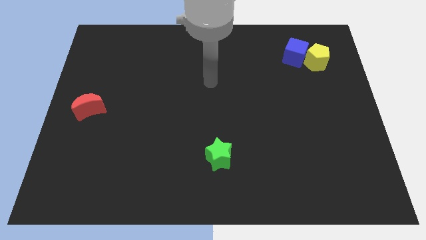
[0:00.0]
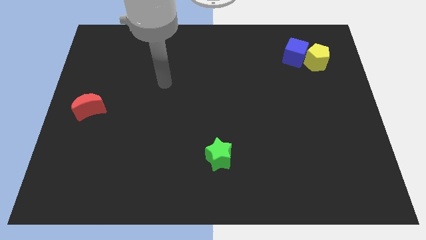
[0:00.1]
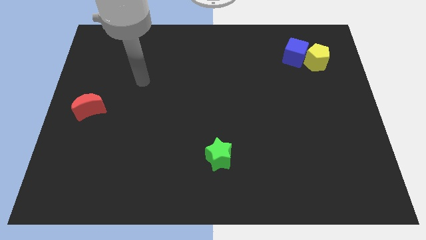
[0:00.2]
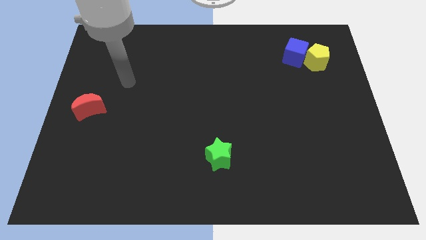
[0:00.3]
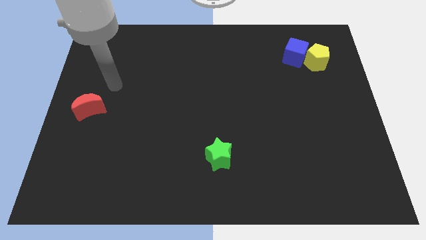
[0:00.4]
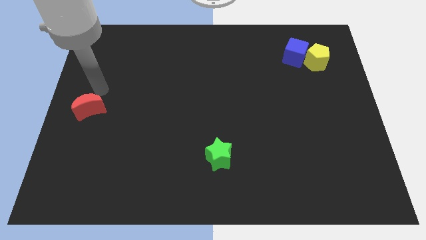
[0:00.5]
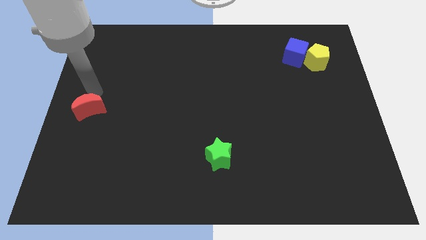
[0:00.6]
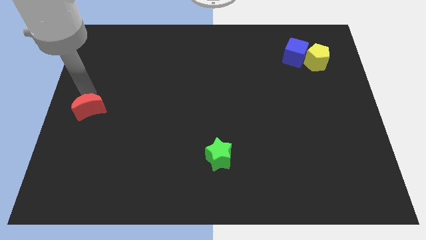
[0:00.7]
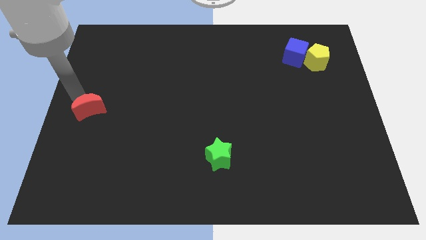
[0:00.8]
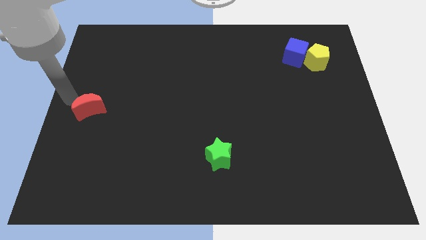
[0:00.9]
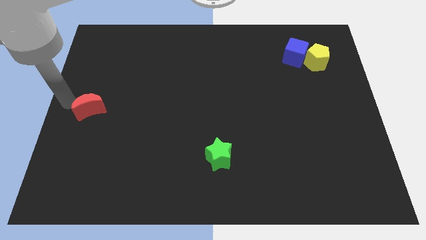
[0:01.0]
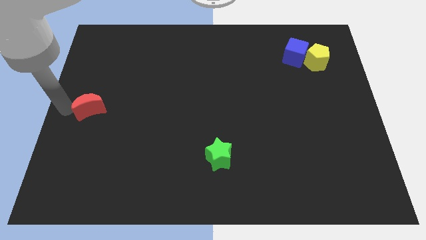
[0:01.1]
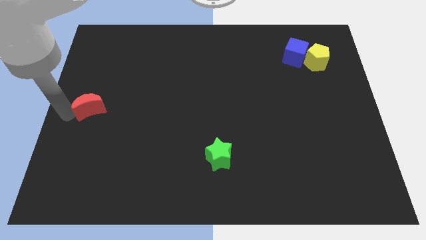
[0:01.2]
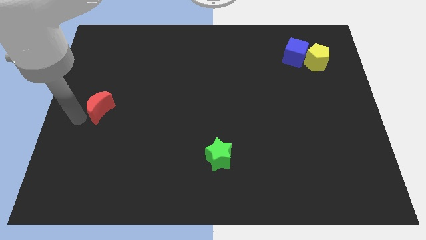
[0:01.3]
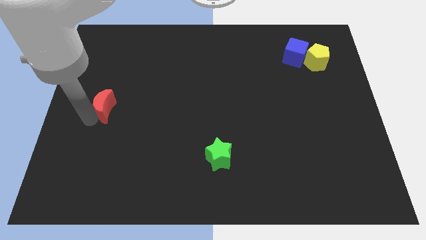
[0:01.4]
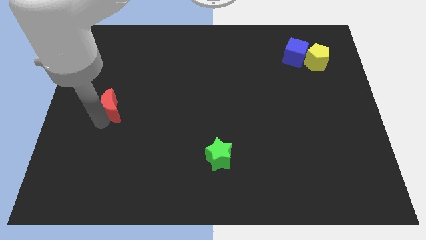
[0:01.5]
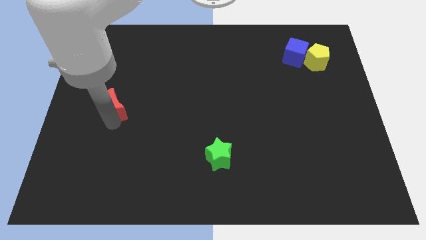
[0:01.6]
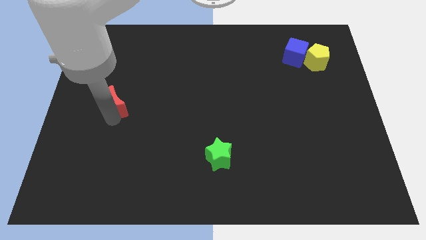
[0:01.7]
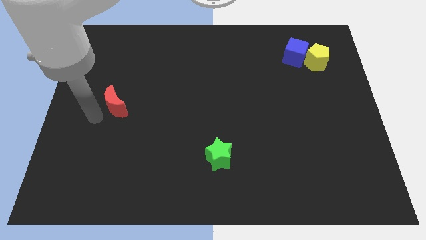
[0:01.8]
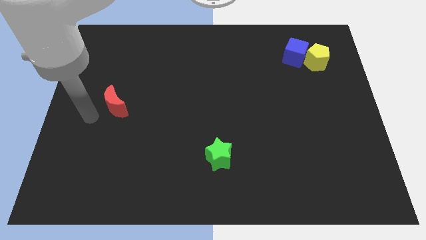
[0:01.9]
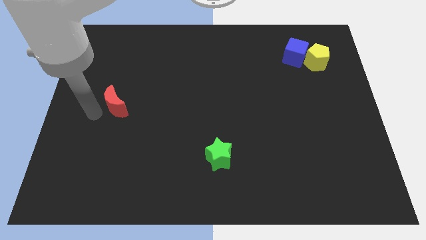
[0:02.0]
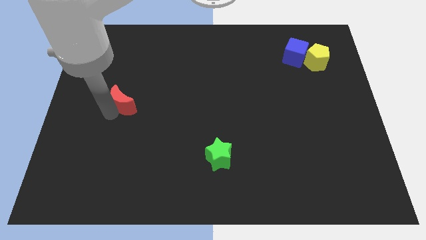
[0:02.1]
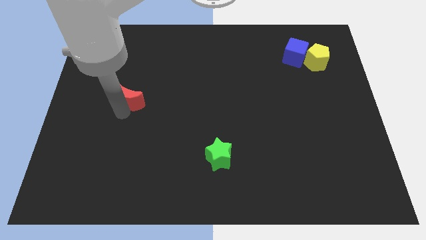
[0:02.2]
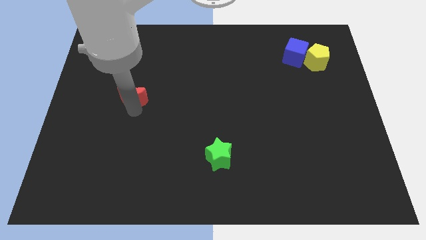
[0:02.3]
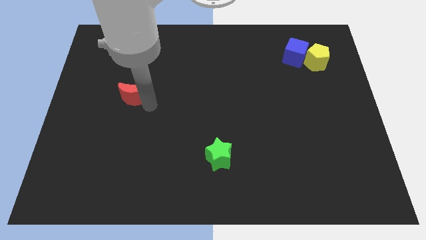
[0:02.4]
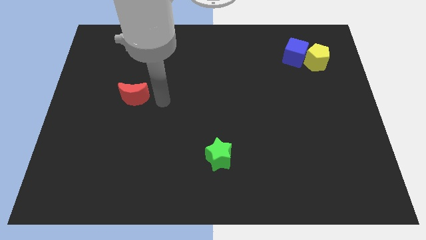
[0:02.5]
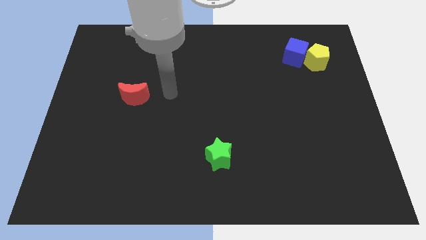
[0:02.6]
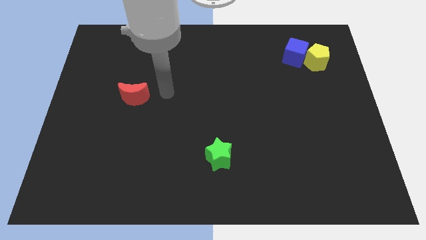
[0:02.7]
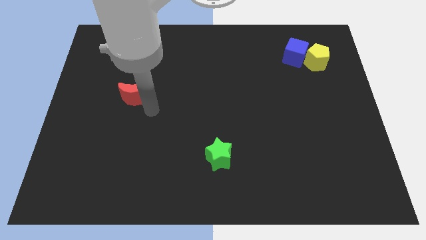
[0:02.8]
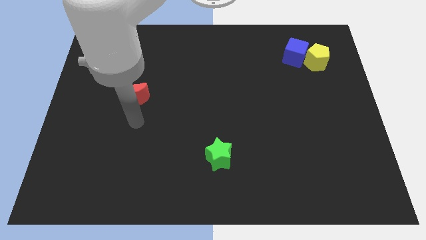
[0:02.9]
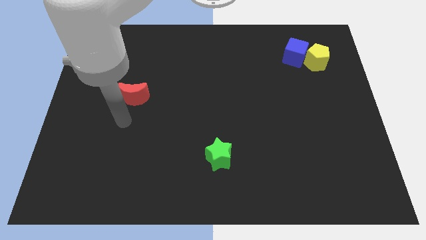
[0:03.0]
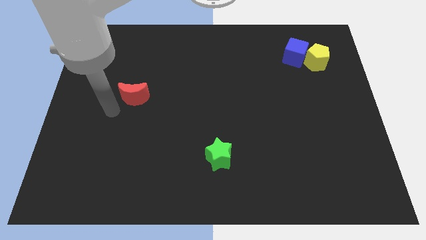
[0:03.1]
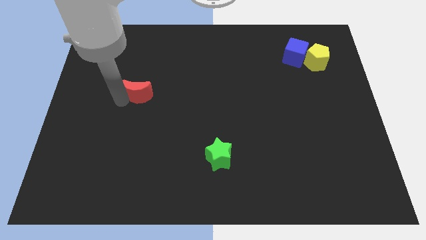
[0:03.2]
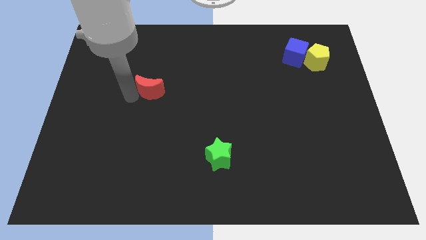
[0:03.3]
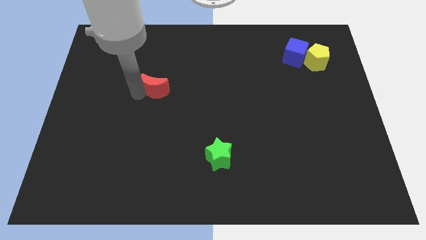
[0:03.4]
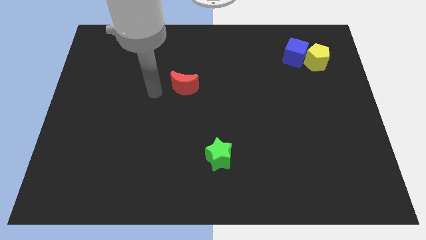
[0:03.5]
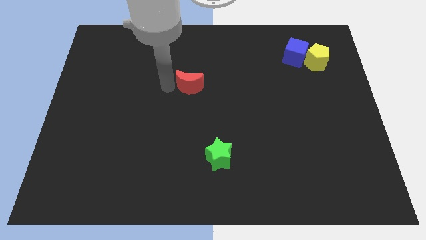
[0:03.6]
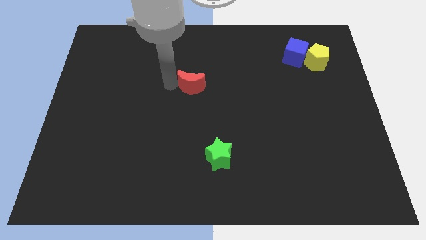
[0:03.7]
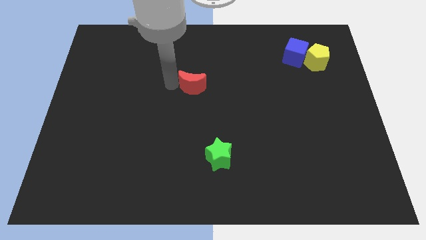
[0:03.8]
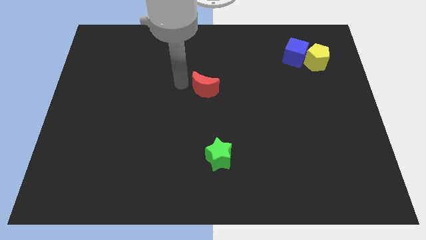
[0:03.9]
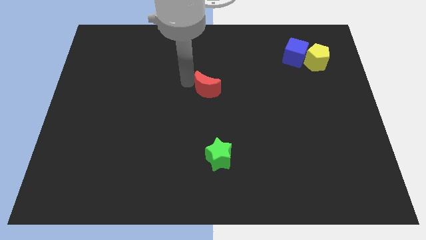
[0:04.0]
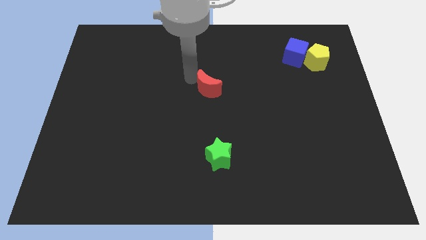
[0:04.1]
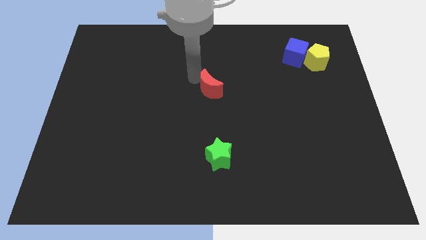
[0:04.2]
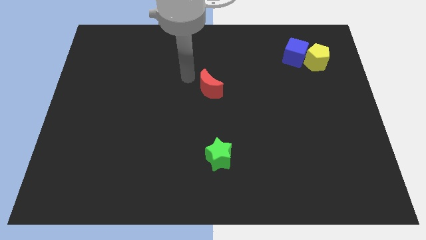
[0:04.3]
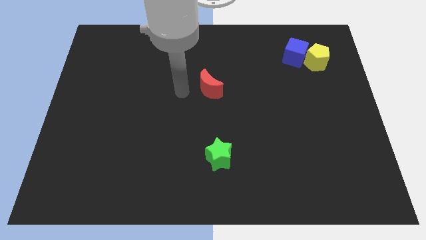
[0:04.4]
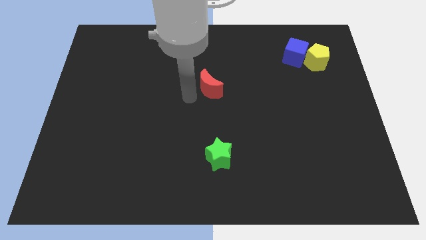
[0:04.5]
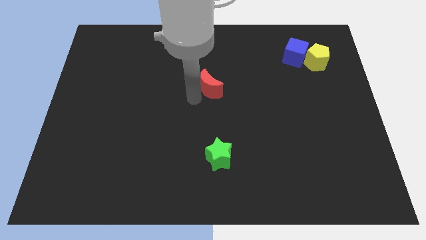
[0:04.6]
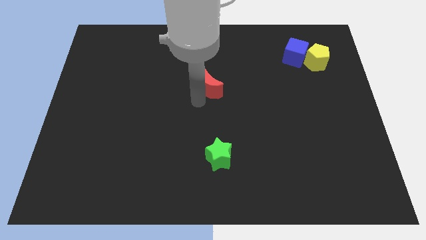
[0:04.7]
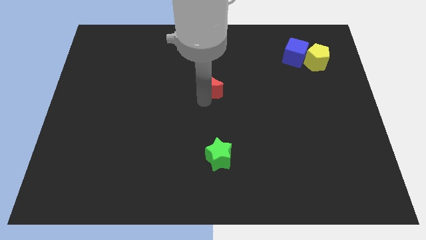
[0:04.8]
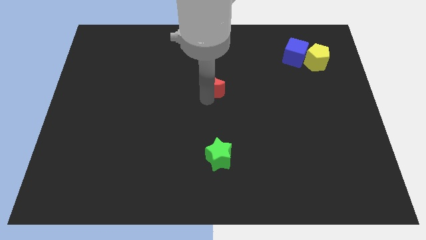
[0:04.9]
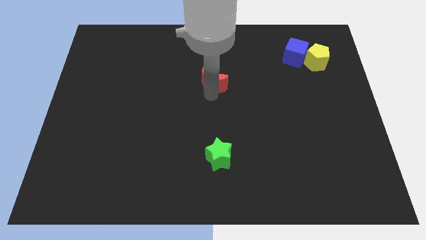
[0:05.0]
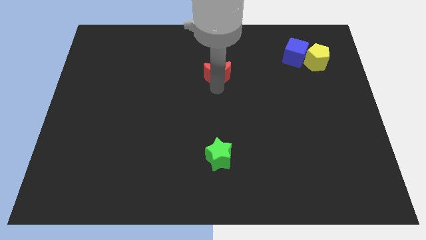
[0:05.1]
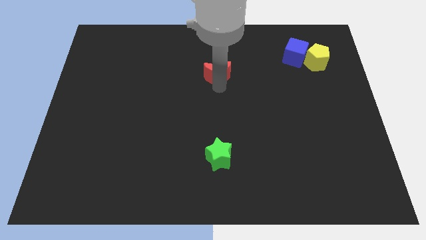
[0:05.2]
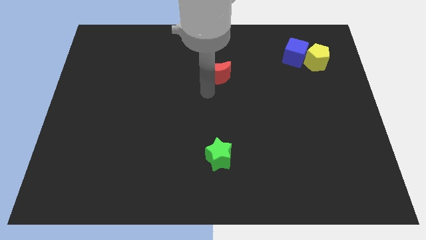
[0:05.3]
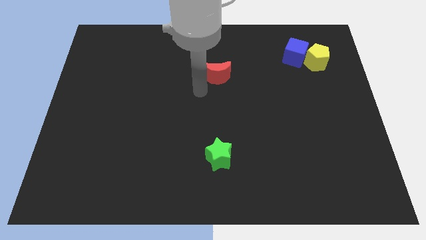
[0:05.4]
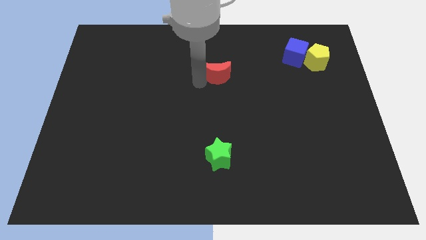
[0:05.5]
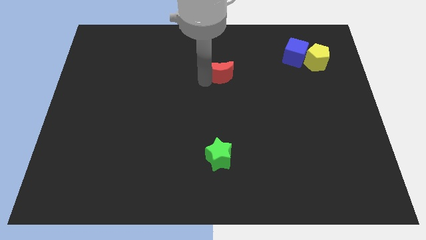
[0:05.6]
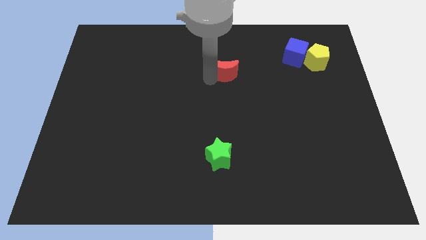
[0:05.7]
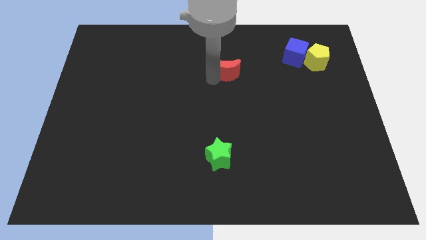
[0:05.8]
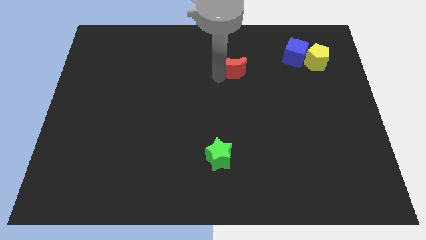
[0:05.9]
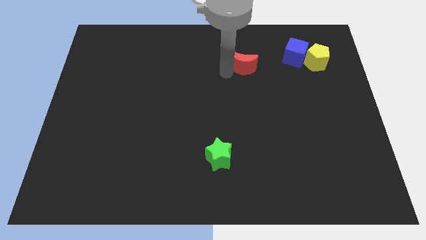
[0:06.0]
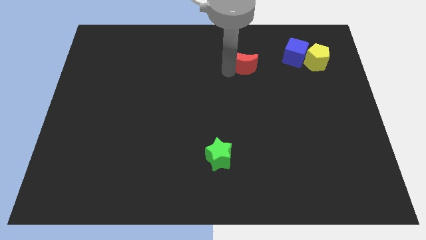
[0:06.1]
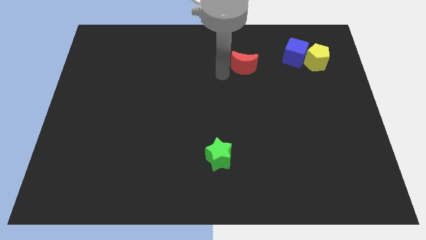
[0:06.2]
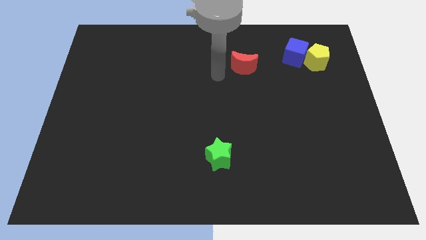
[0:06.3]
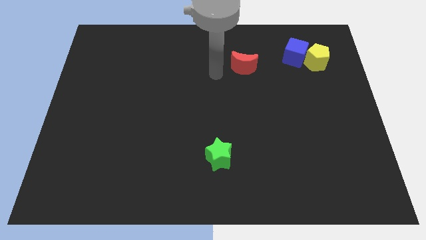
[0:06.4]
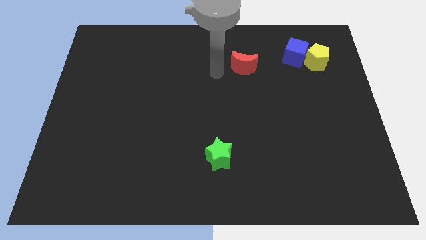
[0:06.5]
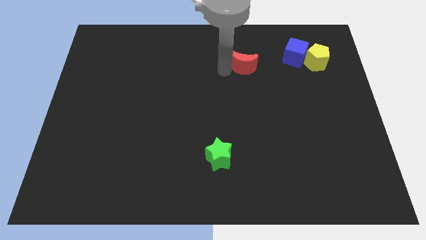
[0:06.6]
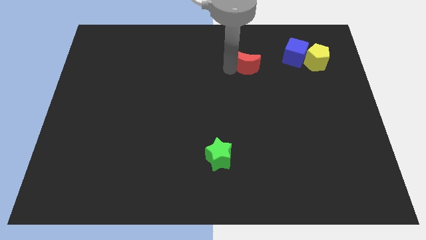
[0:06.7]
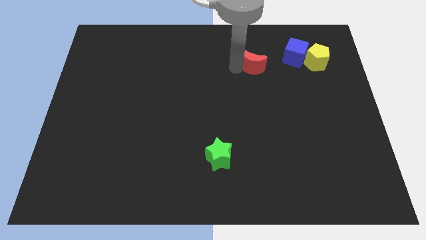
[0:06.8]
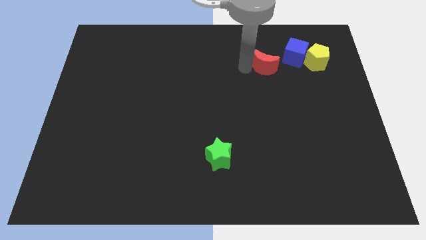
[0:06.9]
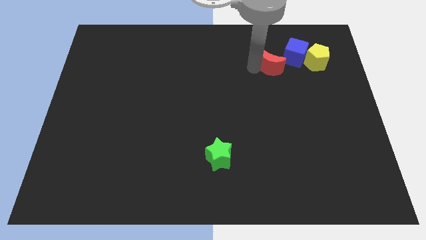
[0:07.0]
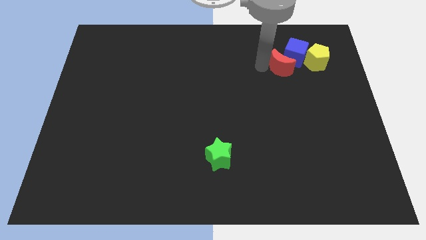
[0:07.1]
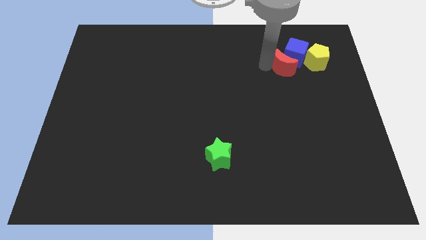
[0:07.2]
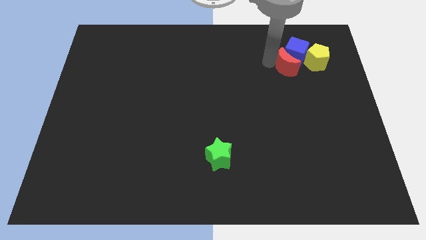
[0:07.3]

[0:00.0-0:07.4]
push the red moon to the cube

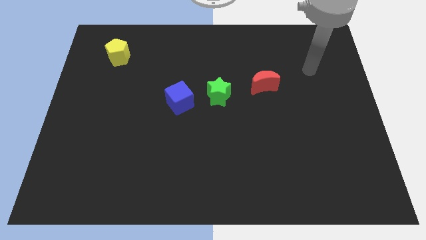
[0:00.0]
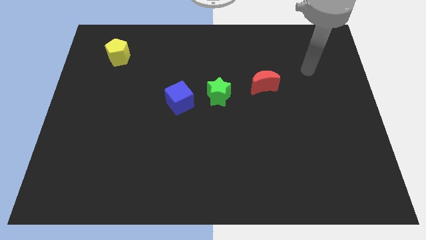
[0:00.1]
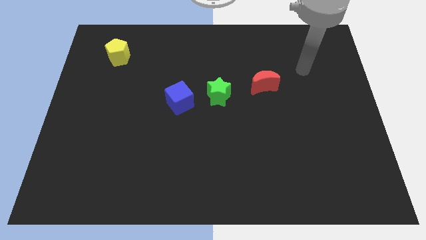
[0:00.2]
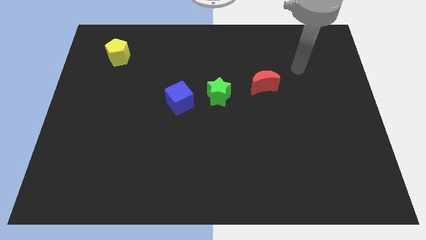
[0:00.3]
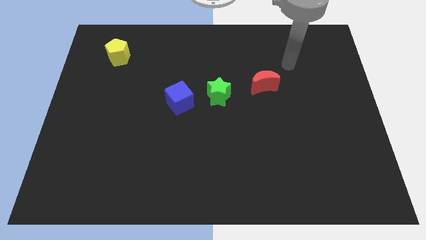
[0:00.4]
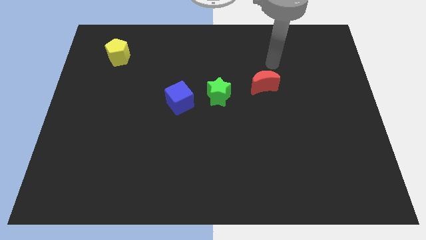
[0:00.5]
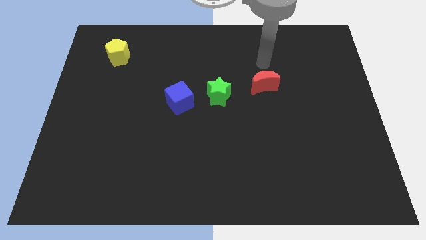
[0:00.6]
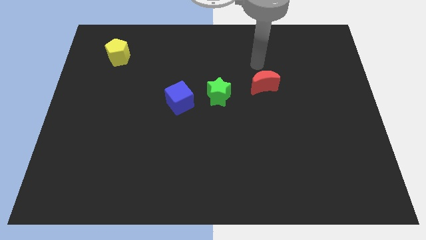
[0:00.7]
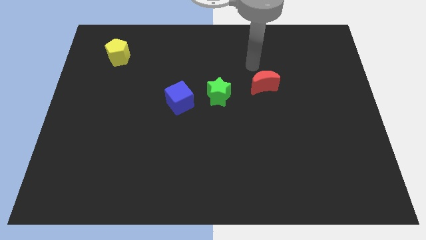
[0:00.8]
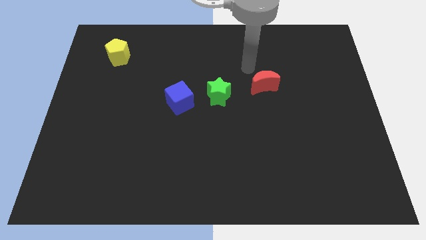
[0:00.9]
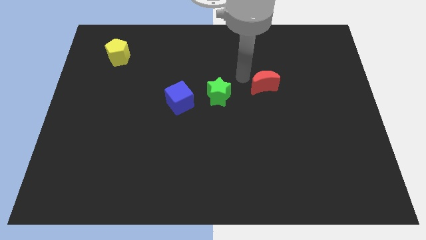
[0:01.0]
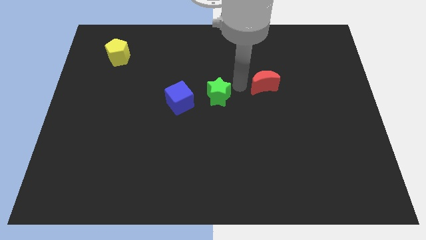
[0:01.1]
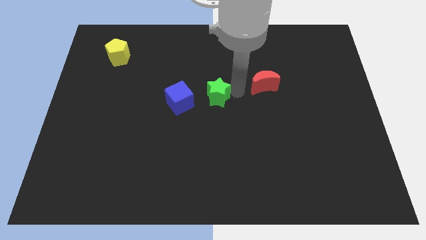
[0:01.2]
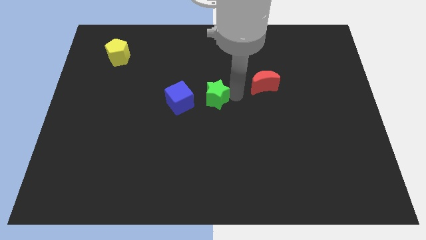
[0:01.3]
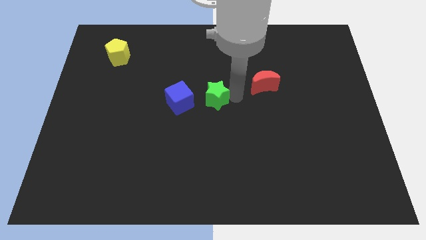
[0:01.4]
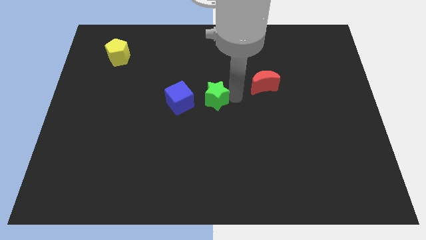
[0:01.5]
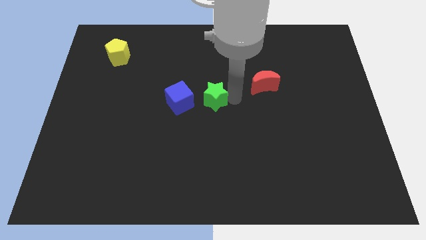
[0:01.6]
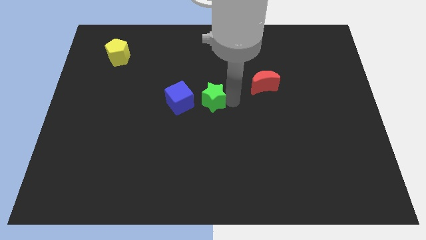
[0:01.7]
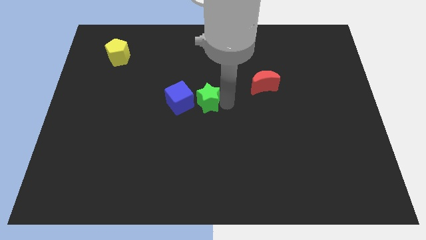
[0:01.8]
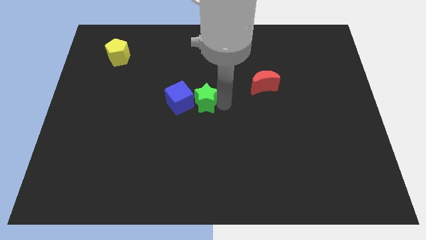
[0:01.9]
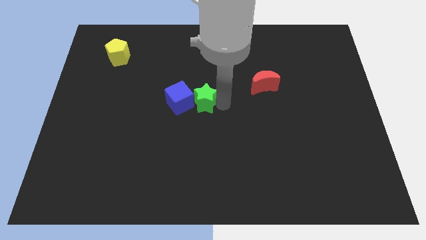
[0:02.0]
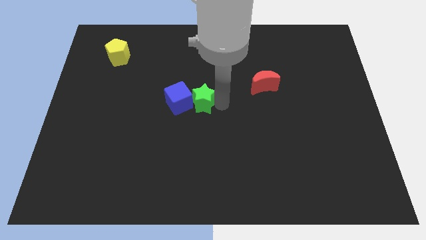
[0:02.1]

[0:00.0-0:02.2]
push the green star next to the blue cube
